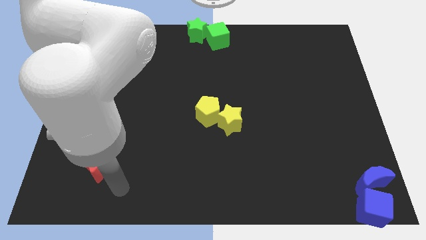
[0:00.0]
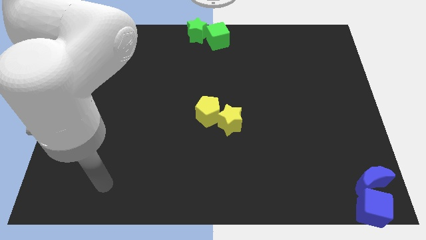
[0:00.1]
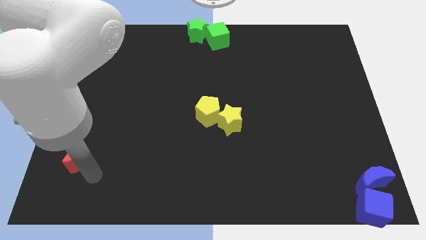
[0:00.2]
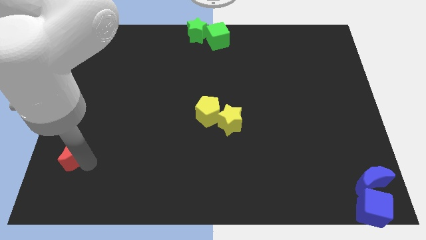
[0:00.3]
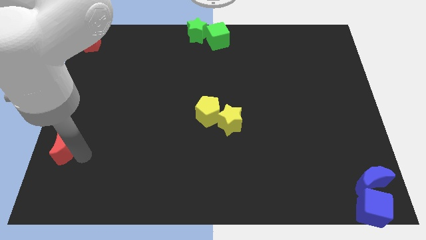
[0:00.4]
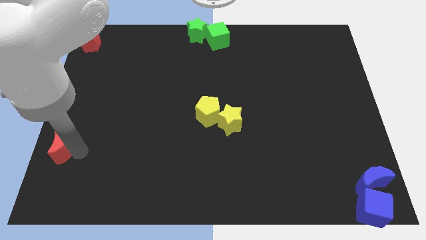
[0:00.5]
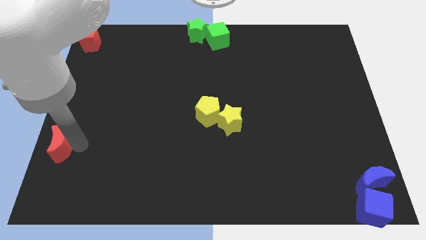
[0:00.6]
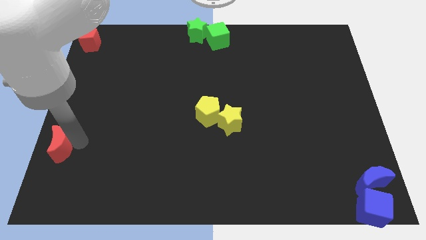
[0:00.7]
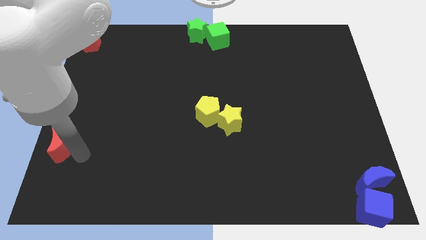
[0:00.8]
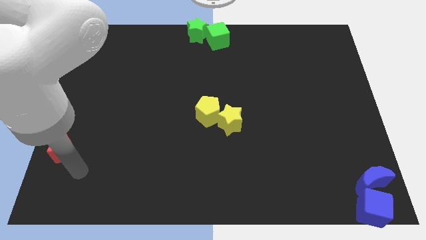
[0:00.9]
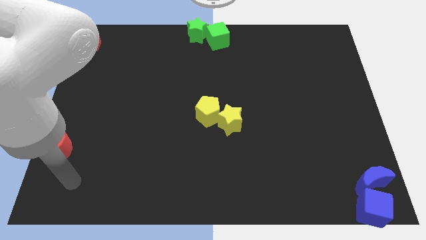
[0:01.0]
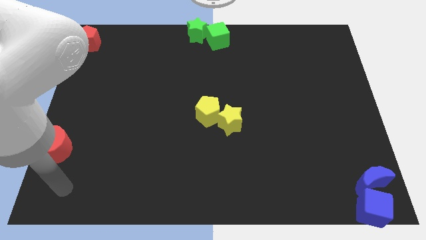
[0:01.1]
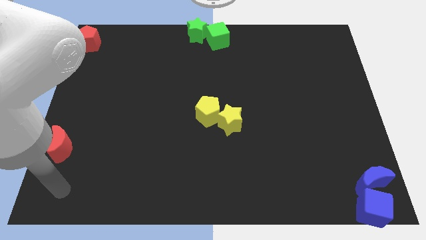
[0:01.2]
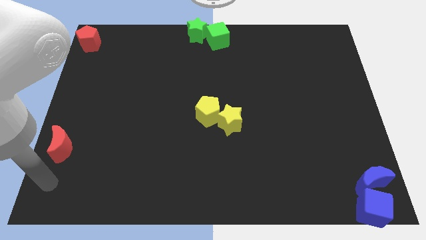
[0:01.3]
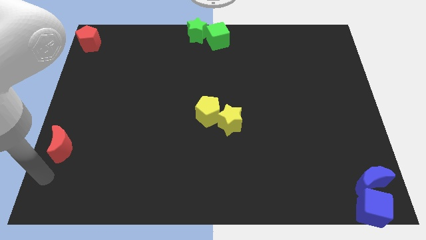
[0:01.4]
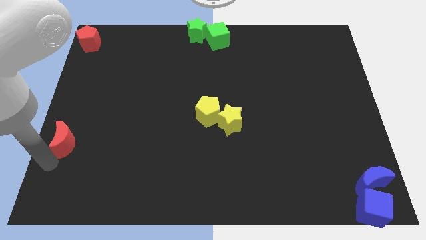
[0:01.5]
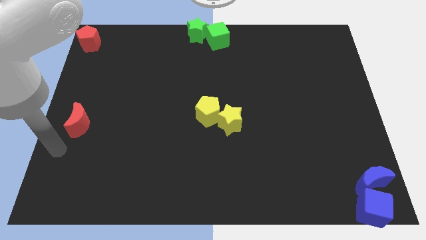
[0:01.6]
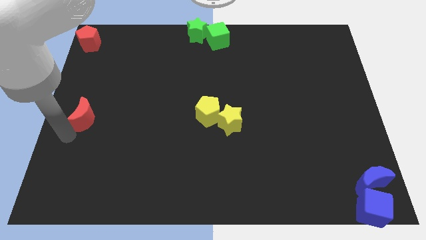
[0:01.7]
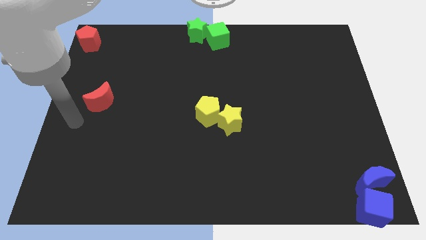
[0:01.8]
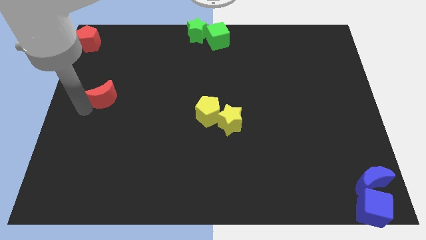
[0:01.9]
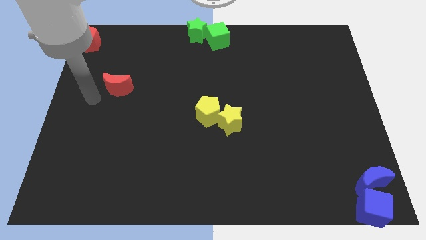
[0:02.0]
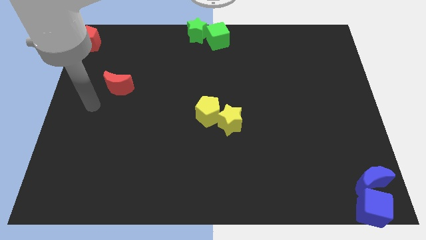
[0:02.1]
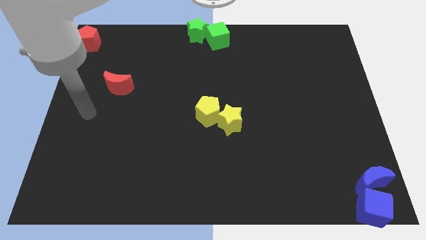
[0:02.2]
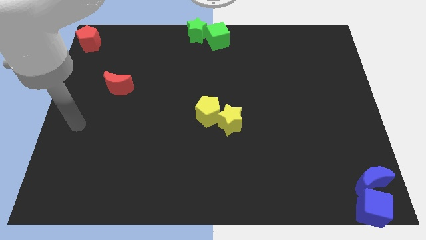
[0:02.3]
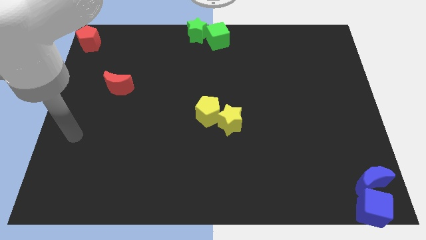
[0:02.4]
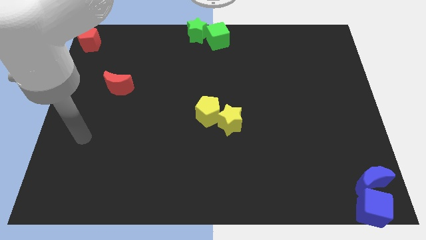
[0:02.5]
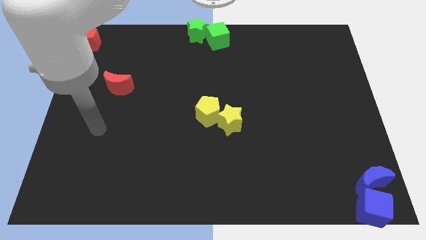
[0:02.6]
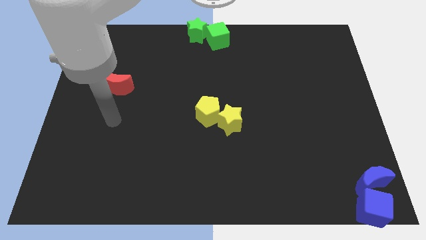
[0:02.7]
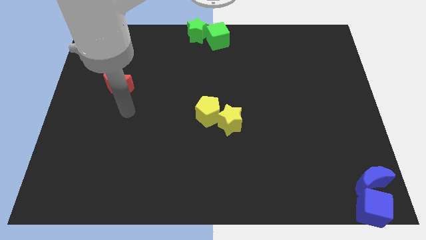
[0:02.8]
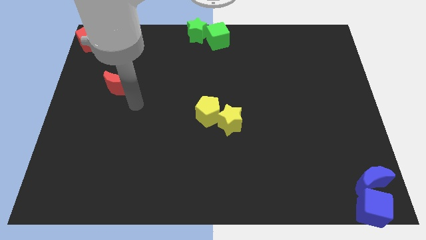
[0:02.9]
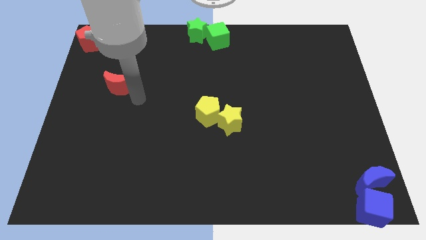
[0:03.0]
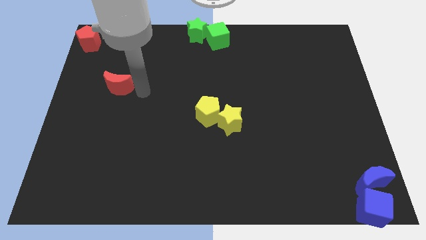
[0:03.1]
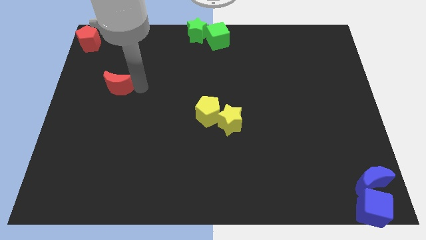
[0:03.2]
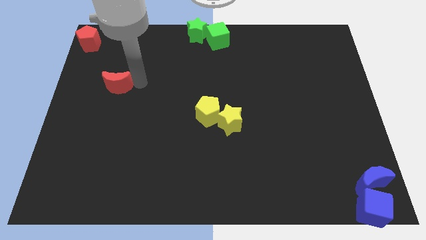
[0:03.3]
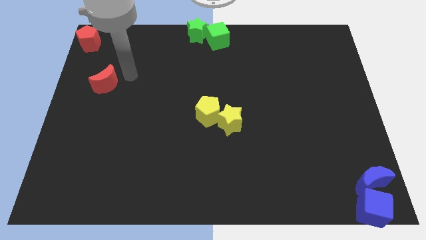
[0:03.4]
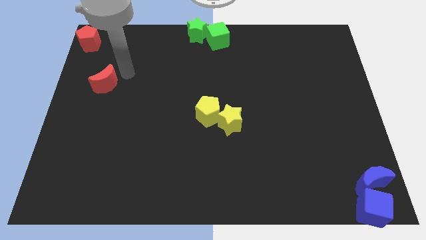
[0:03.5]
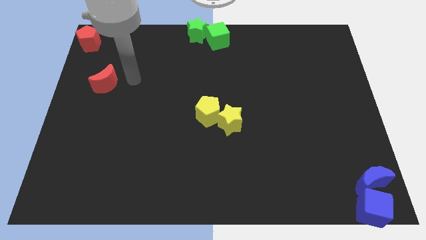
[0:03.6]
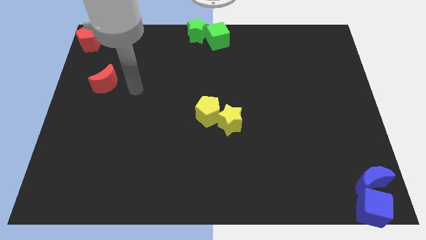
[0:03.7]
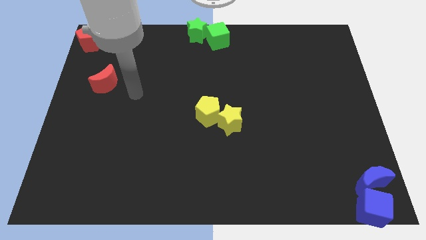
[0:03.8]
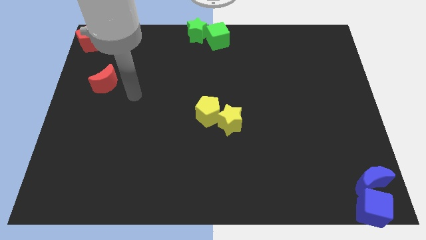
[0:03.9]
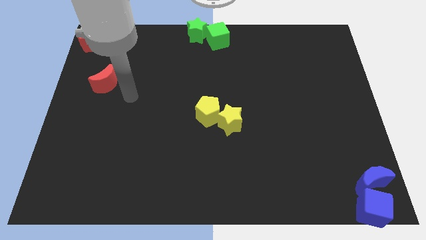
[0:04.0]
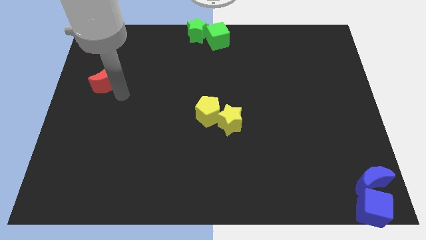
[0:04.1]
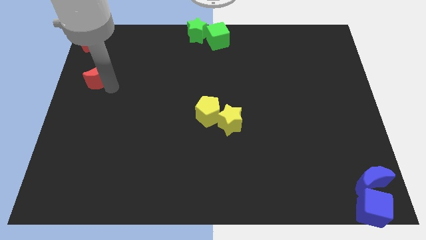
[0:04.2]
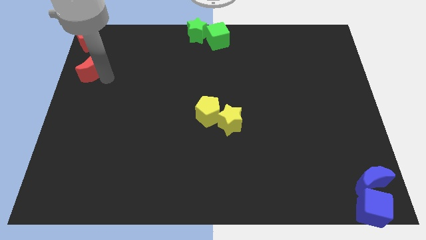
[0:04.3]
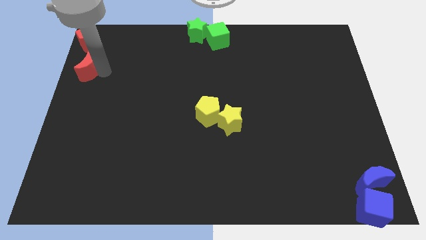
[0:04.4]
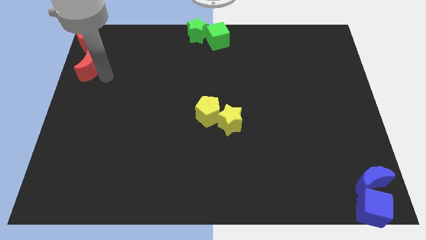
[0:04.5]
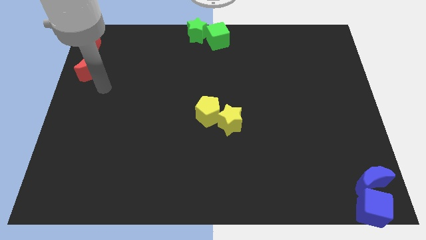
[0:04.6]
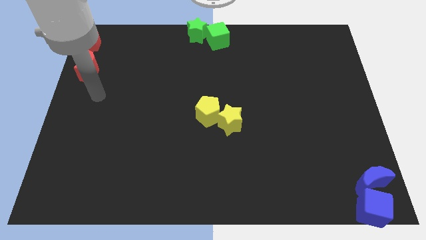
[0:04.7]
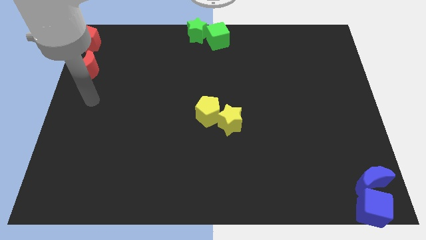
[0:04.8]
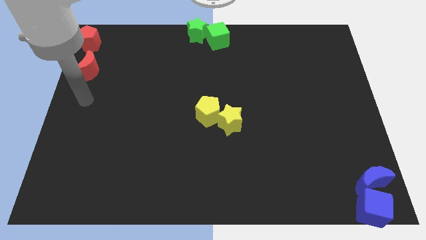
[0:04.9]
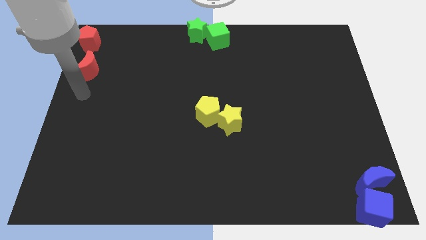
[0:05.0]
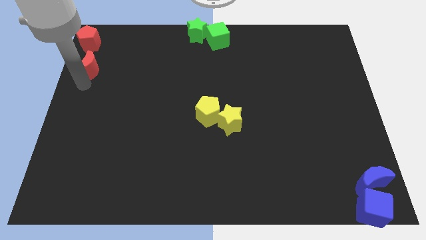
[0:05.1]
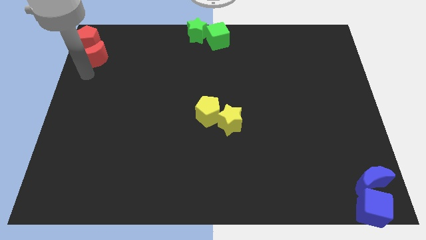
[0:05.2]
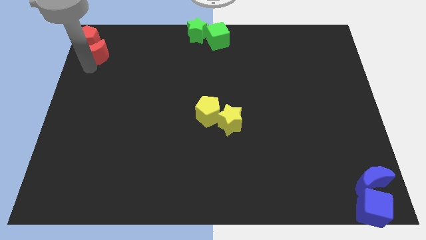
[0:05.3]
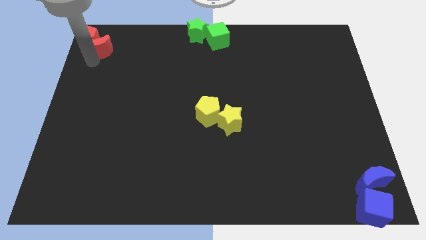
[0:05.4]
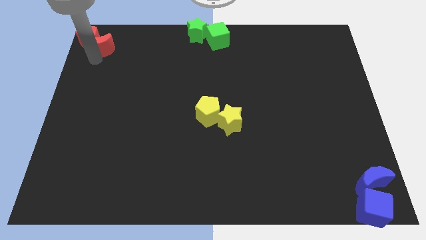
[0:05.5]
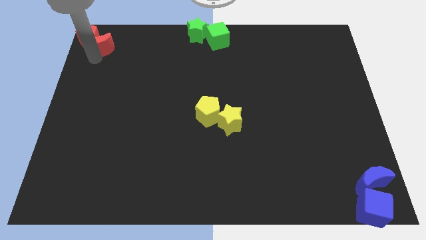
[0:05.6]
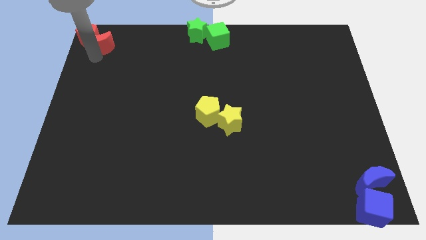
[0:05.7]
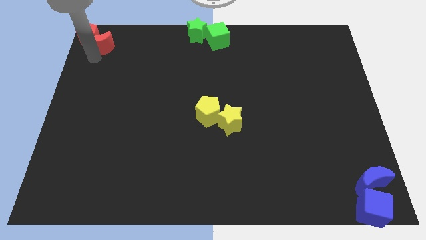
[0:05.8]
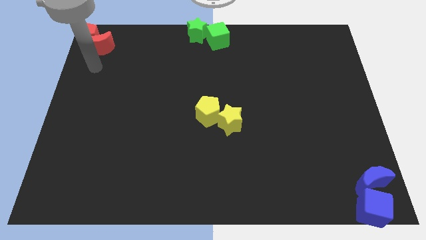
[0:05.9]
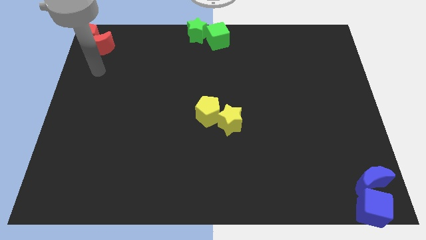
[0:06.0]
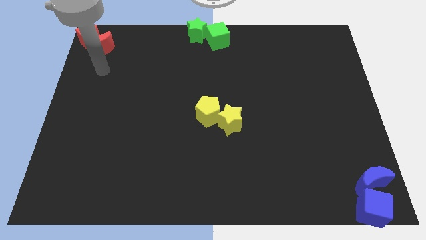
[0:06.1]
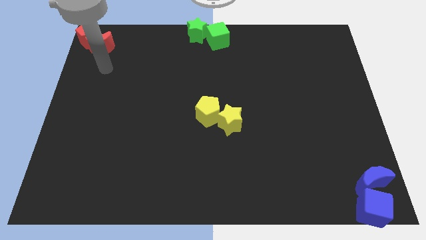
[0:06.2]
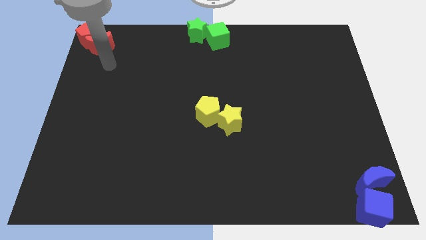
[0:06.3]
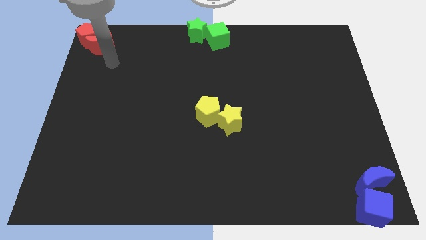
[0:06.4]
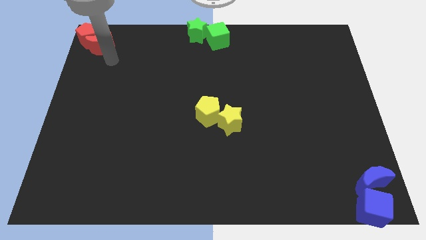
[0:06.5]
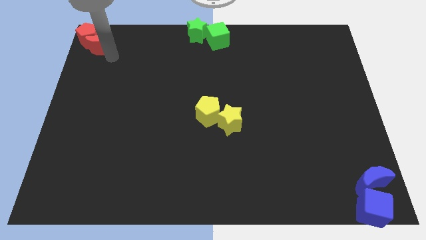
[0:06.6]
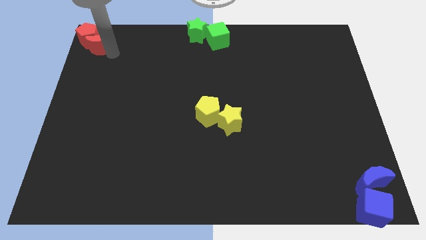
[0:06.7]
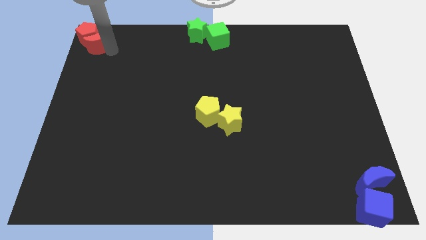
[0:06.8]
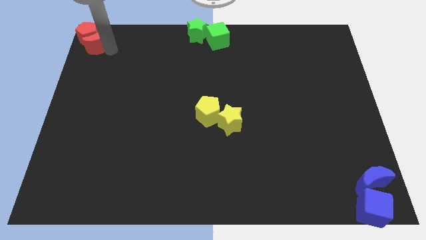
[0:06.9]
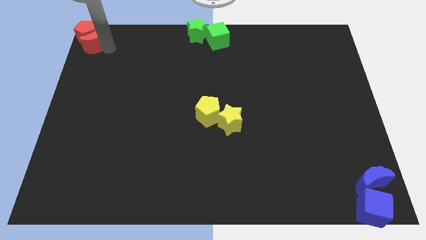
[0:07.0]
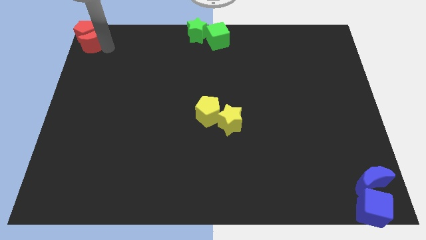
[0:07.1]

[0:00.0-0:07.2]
push the red crescent into the bottom of the red pentagon

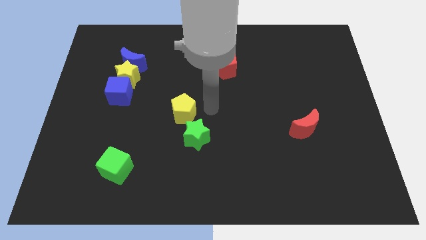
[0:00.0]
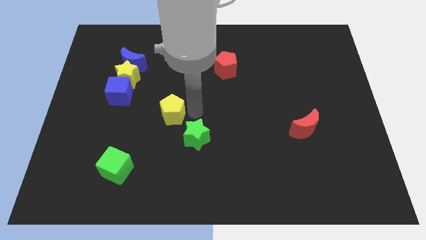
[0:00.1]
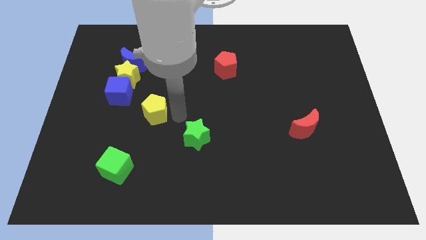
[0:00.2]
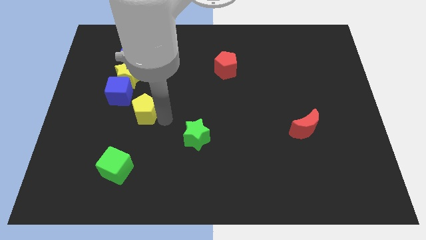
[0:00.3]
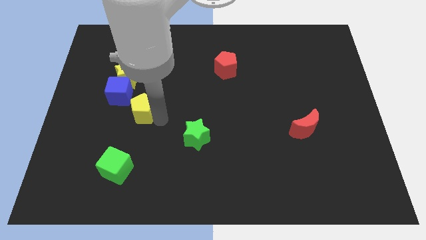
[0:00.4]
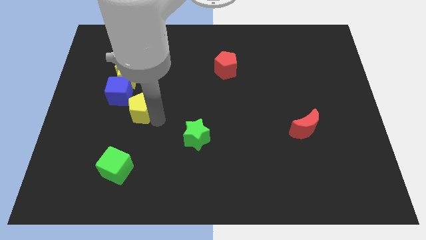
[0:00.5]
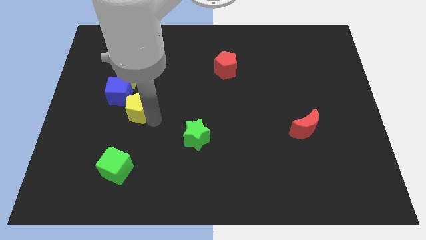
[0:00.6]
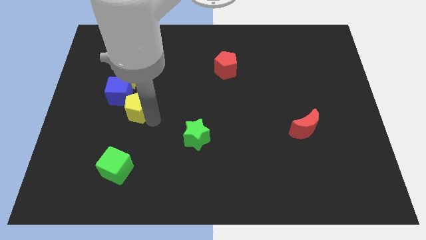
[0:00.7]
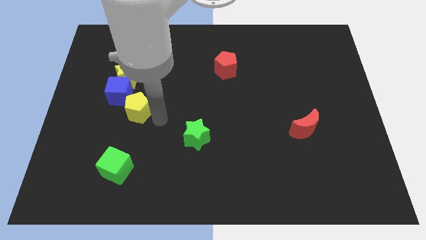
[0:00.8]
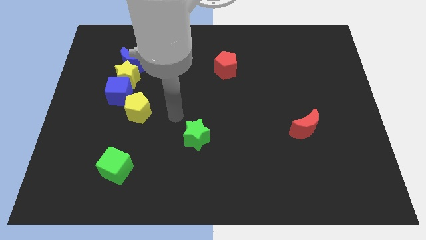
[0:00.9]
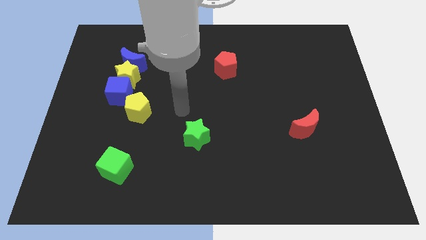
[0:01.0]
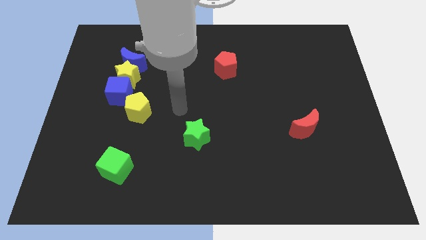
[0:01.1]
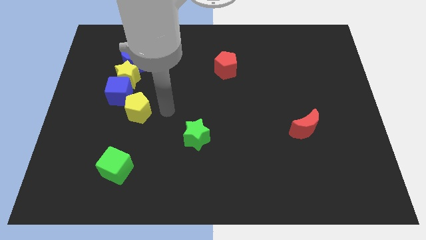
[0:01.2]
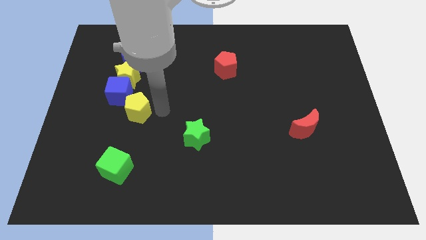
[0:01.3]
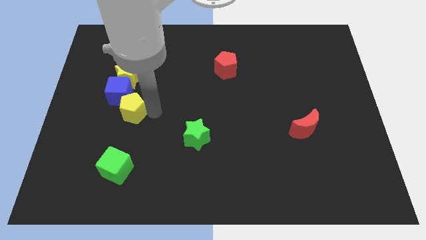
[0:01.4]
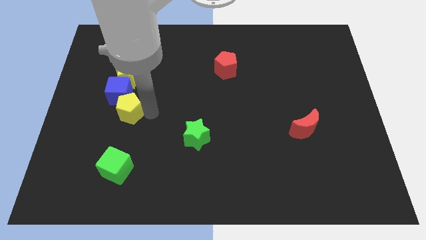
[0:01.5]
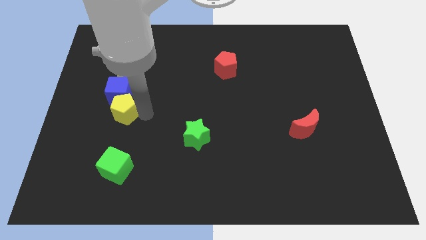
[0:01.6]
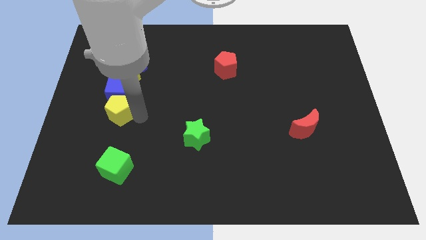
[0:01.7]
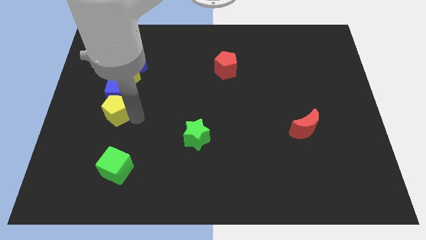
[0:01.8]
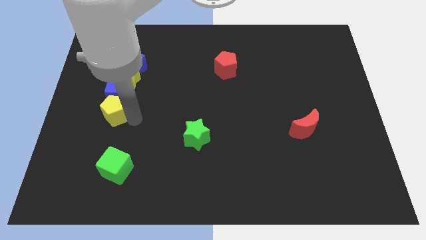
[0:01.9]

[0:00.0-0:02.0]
move the yellow pentagon below the blue cube
